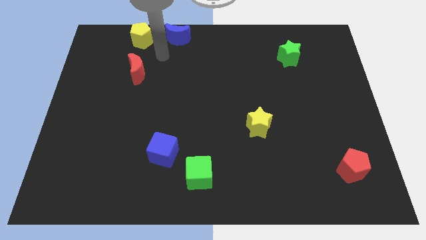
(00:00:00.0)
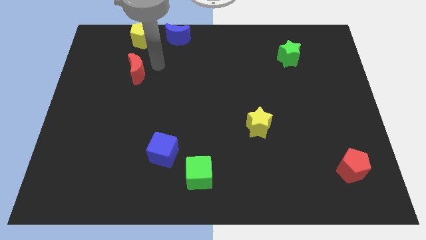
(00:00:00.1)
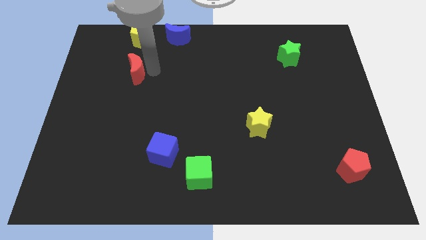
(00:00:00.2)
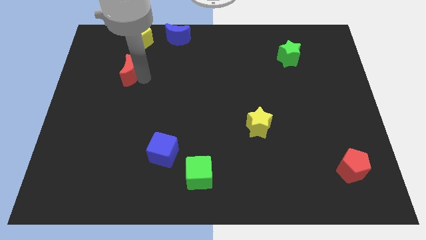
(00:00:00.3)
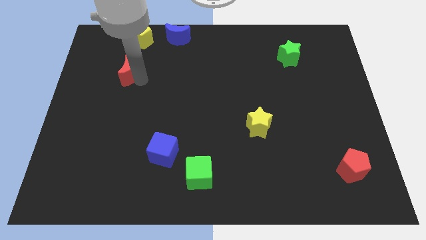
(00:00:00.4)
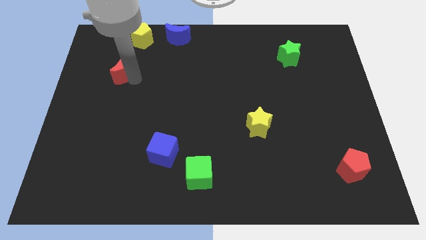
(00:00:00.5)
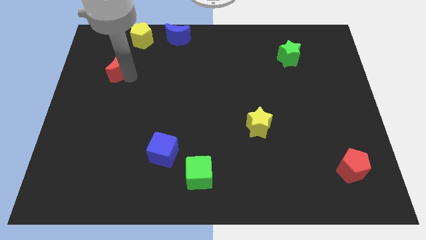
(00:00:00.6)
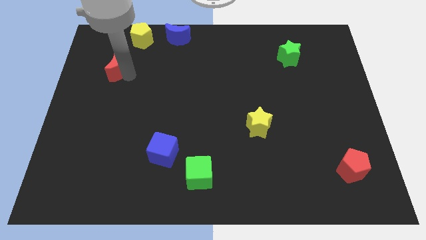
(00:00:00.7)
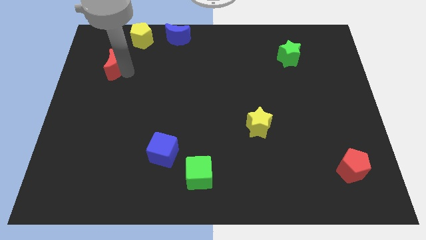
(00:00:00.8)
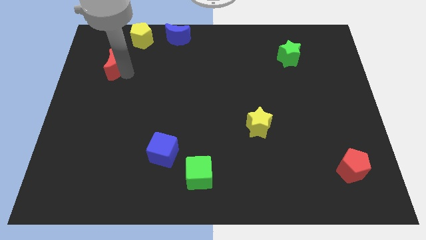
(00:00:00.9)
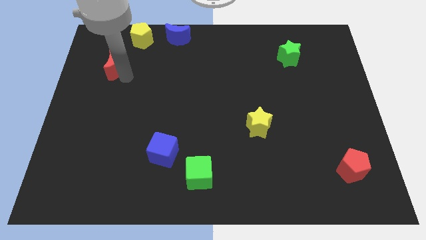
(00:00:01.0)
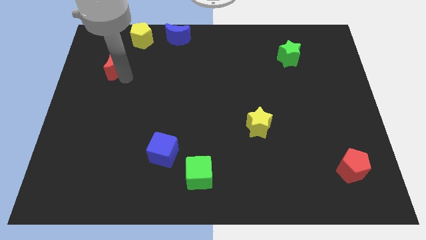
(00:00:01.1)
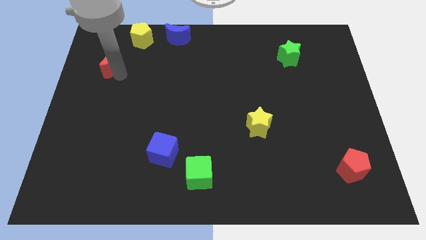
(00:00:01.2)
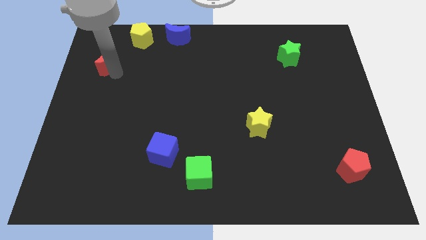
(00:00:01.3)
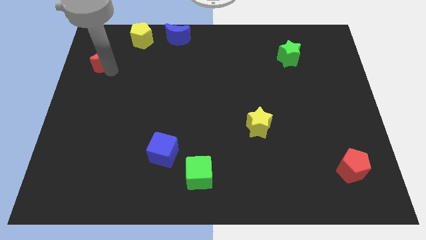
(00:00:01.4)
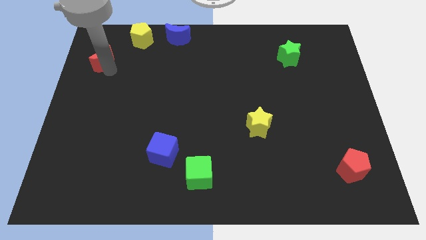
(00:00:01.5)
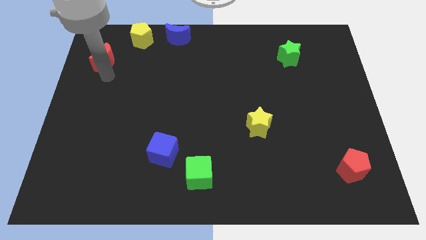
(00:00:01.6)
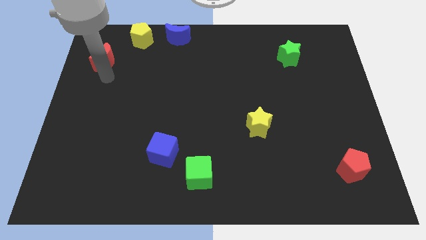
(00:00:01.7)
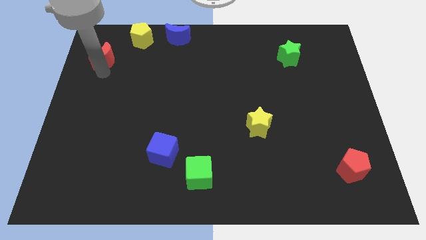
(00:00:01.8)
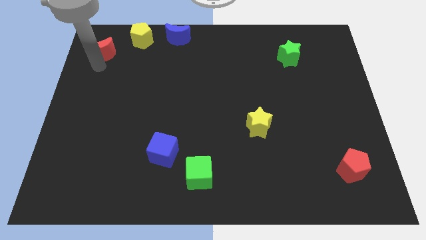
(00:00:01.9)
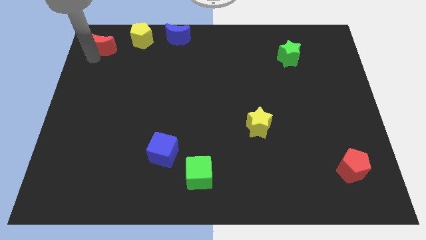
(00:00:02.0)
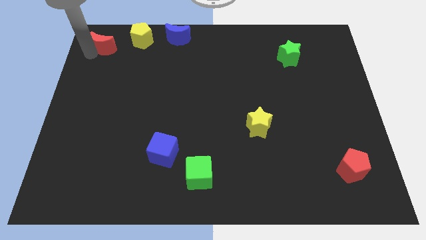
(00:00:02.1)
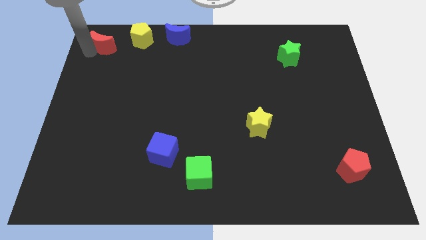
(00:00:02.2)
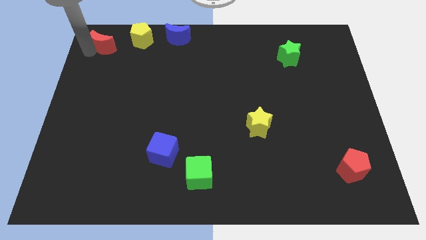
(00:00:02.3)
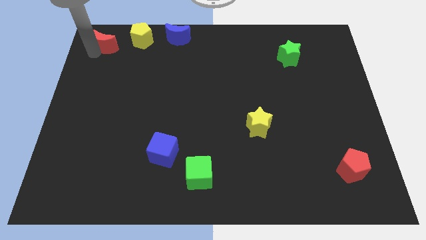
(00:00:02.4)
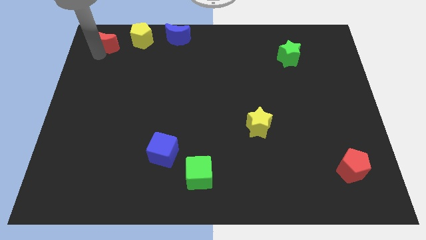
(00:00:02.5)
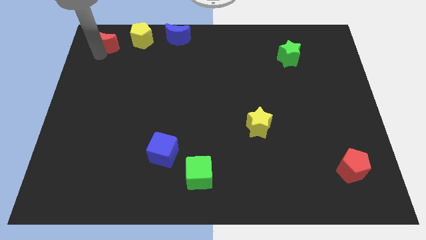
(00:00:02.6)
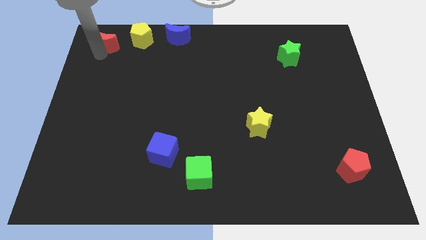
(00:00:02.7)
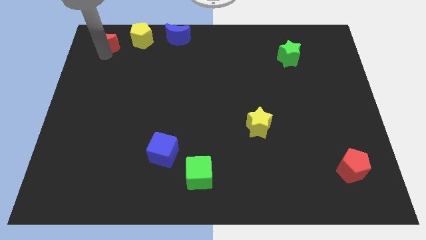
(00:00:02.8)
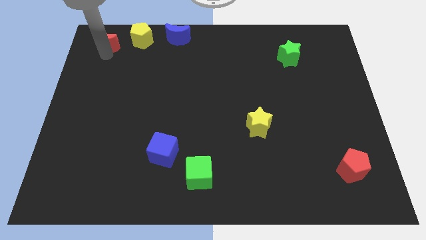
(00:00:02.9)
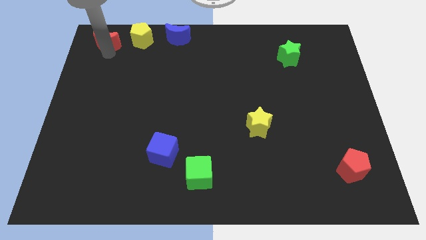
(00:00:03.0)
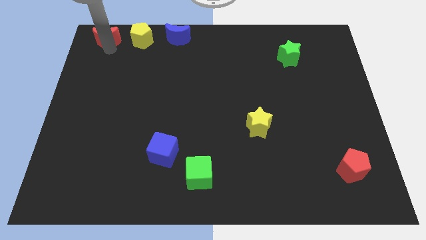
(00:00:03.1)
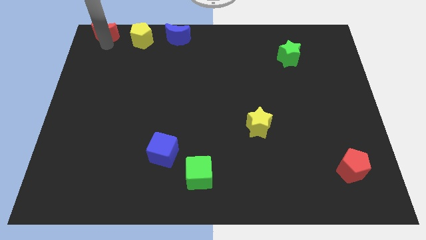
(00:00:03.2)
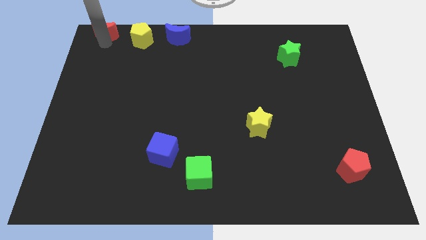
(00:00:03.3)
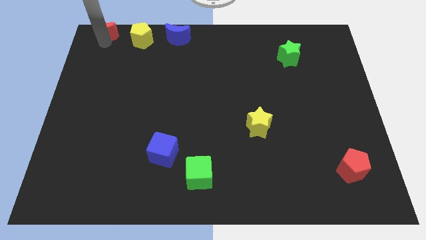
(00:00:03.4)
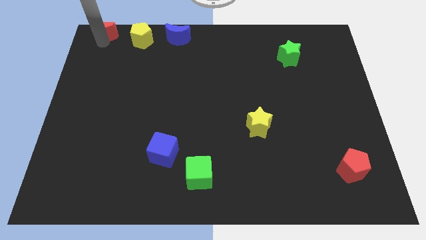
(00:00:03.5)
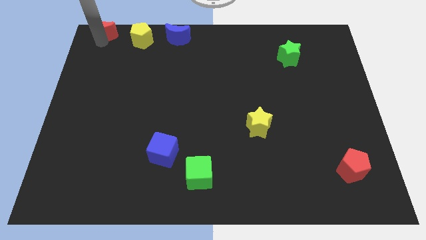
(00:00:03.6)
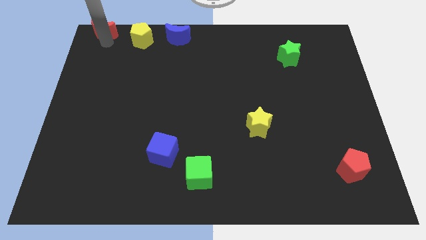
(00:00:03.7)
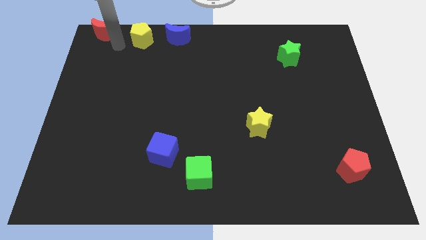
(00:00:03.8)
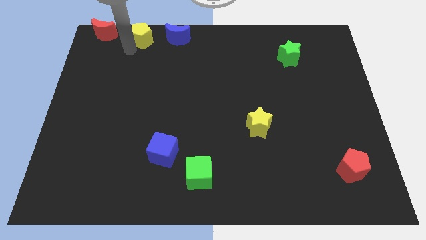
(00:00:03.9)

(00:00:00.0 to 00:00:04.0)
push the red crescent to the left side of the yellow pentagon

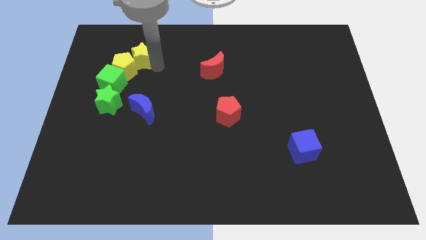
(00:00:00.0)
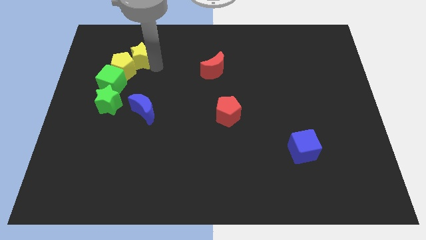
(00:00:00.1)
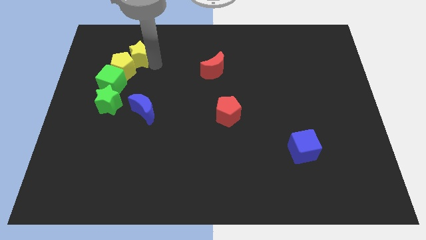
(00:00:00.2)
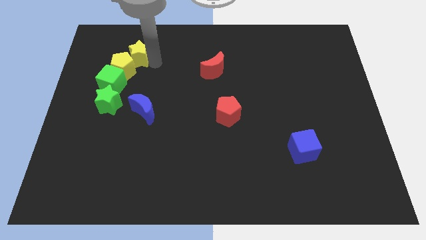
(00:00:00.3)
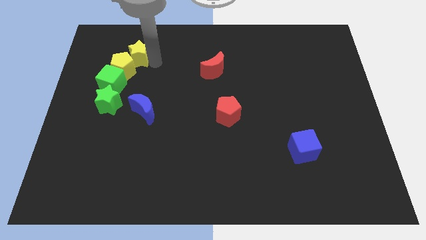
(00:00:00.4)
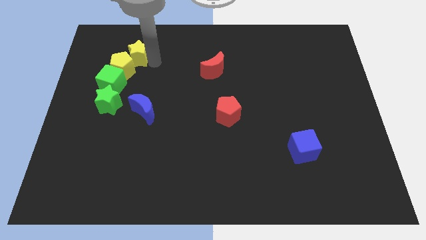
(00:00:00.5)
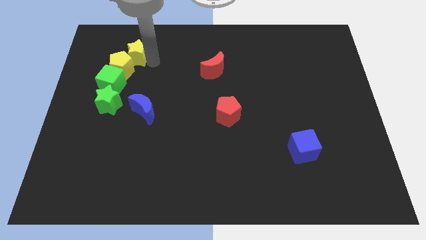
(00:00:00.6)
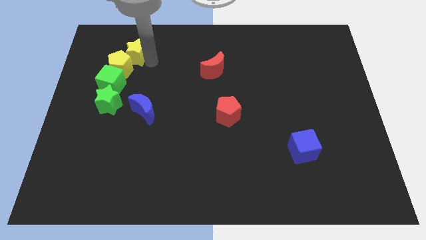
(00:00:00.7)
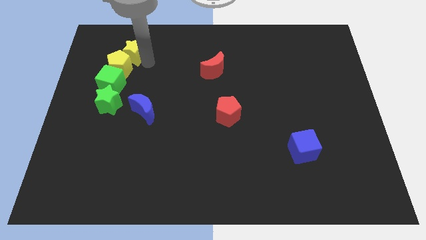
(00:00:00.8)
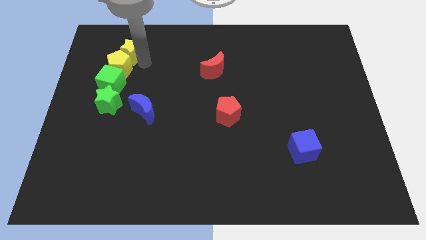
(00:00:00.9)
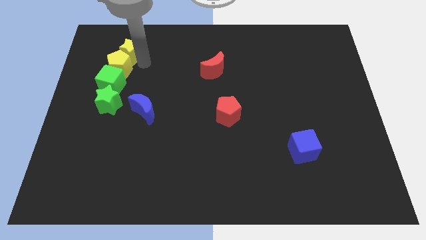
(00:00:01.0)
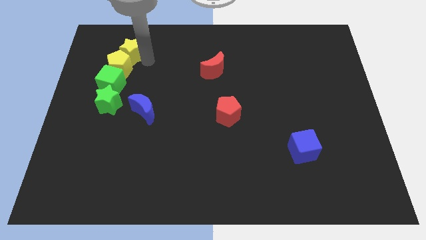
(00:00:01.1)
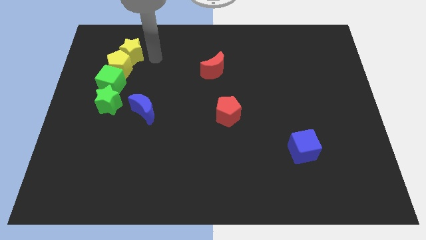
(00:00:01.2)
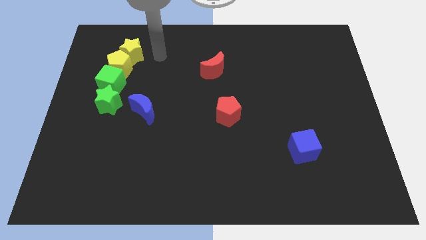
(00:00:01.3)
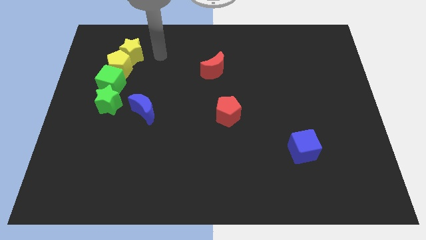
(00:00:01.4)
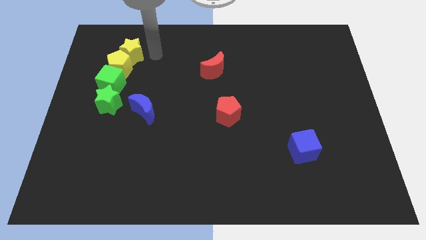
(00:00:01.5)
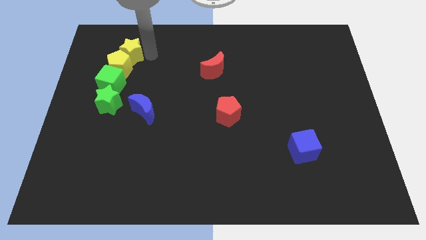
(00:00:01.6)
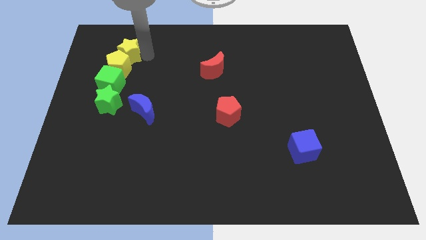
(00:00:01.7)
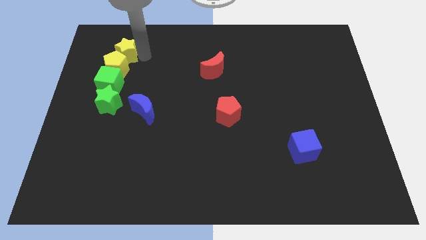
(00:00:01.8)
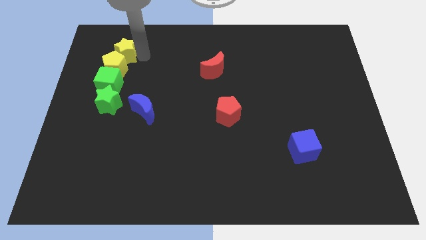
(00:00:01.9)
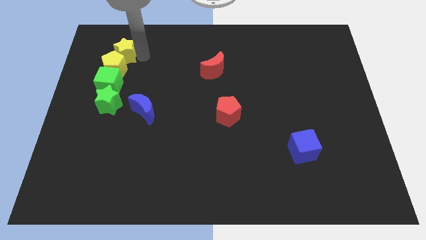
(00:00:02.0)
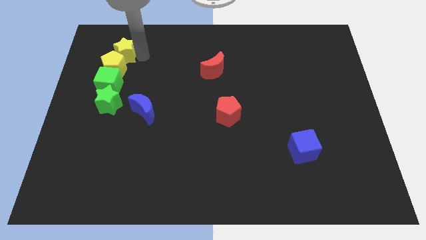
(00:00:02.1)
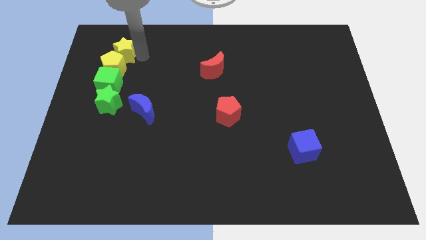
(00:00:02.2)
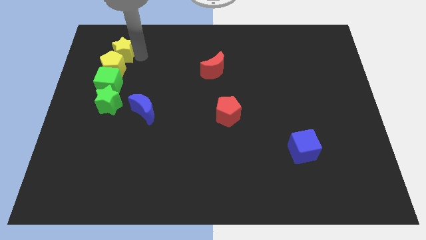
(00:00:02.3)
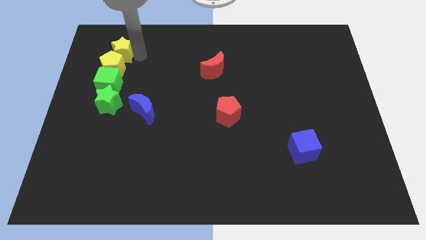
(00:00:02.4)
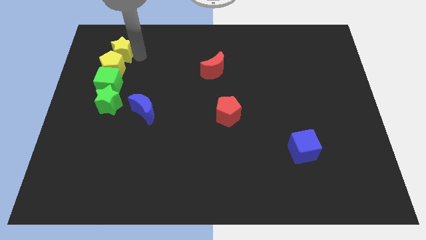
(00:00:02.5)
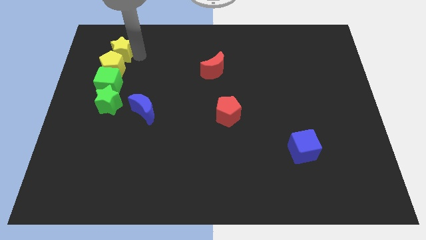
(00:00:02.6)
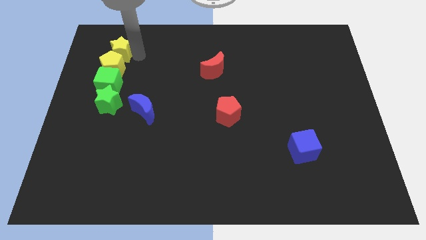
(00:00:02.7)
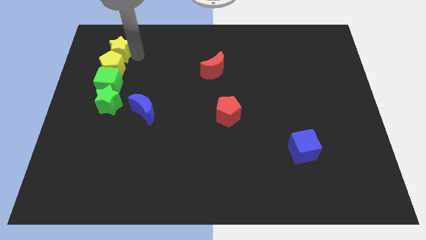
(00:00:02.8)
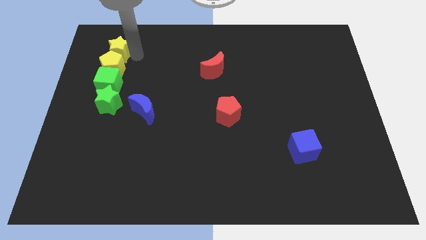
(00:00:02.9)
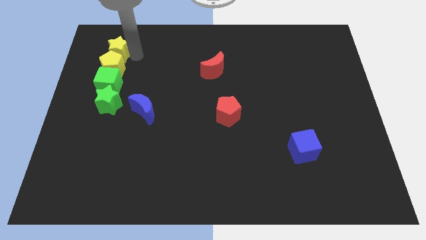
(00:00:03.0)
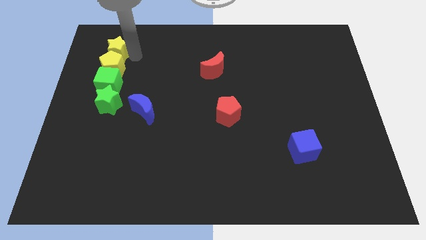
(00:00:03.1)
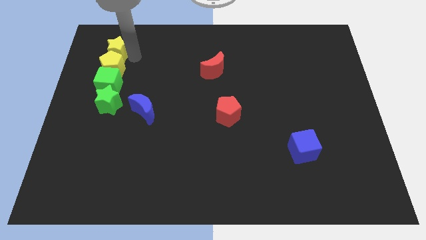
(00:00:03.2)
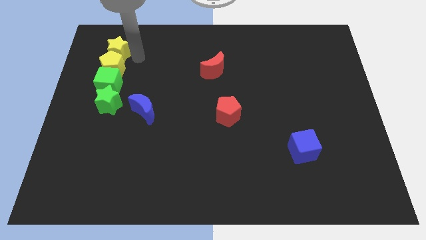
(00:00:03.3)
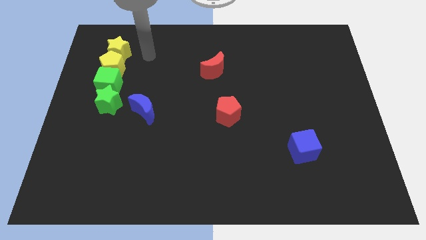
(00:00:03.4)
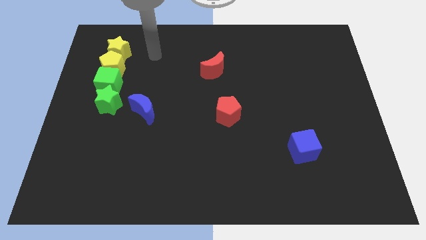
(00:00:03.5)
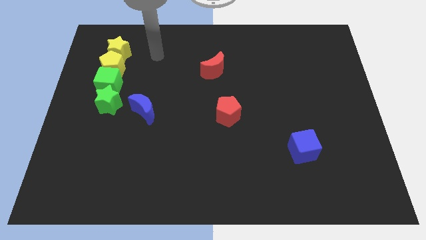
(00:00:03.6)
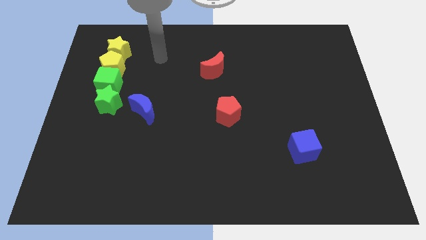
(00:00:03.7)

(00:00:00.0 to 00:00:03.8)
adjust the yellow star on the top of the yellow pentagon

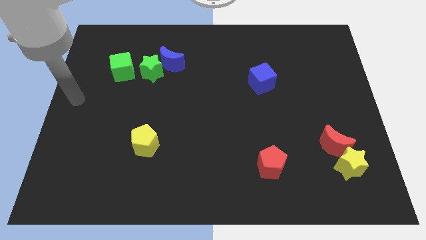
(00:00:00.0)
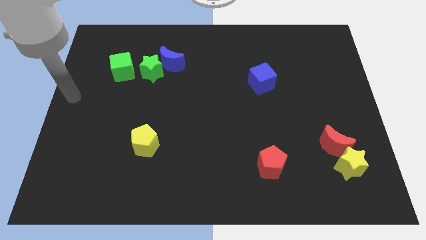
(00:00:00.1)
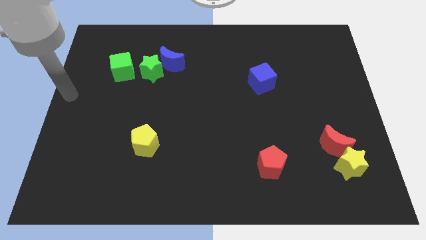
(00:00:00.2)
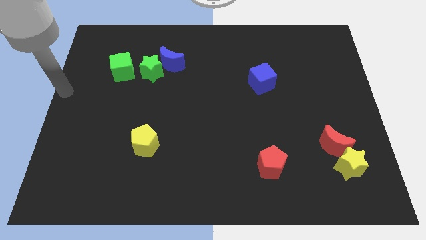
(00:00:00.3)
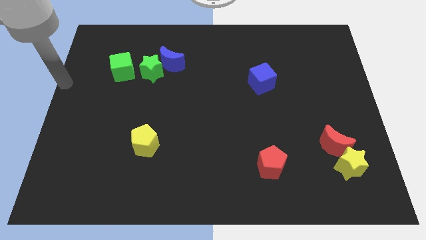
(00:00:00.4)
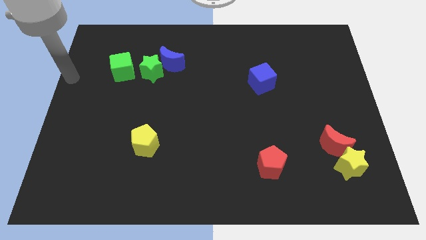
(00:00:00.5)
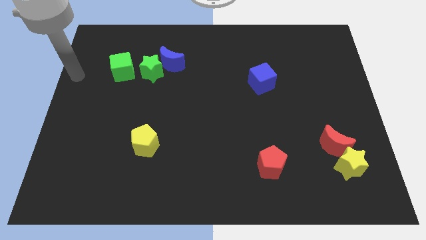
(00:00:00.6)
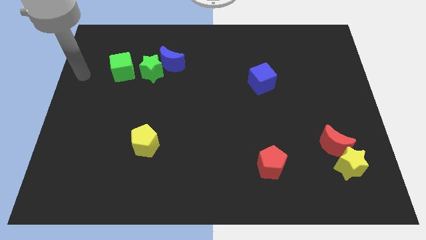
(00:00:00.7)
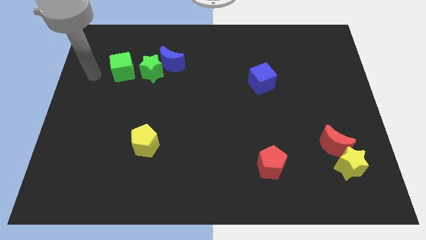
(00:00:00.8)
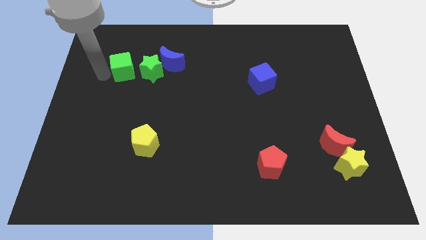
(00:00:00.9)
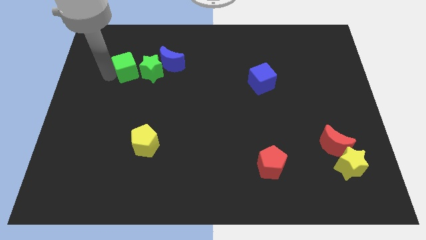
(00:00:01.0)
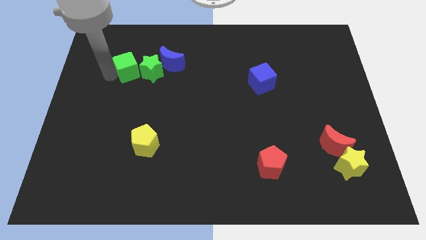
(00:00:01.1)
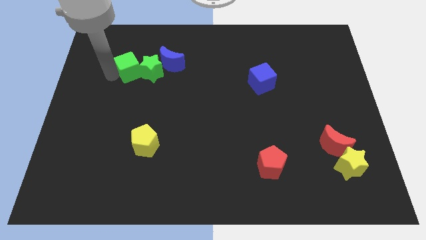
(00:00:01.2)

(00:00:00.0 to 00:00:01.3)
attach the green cube to the green star
